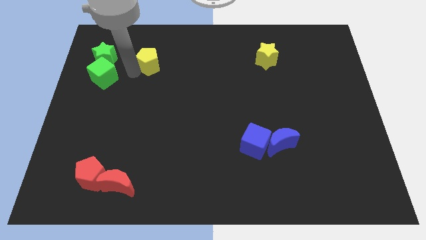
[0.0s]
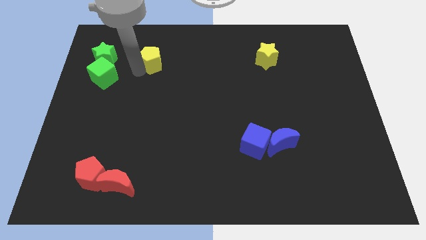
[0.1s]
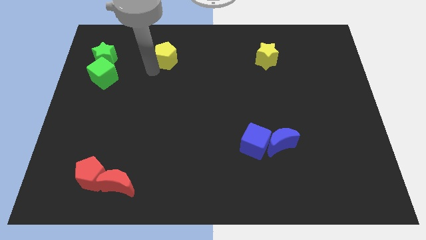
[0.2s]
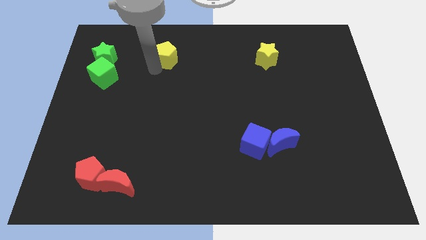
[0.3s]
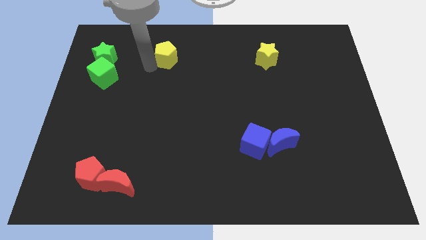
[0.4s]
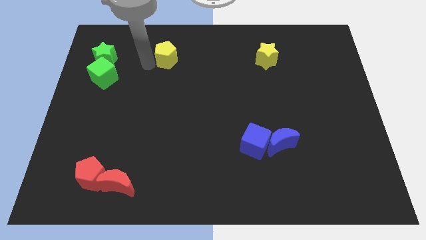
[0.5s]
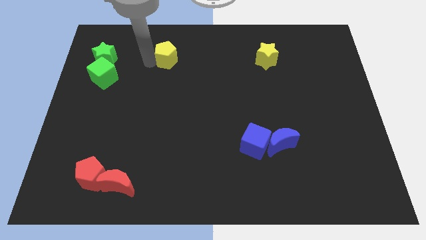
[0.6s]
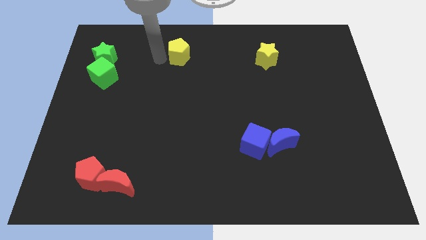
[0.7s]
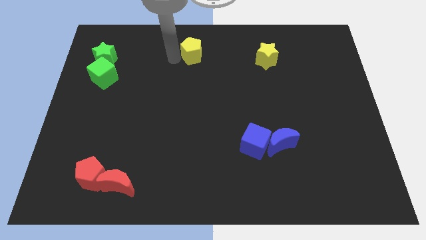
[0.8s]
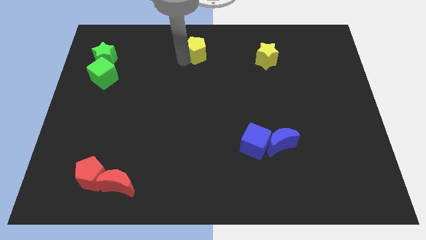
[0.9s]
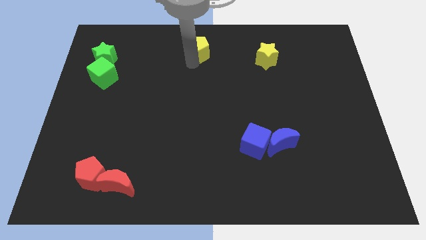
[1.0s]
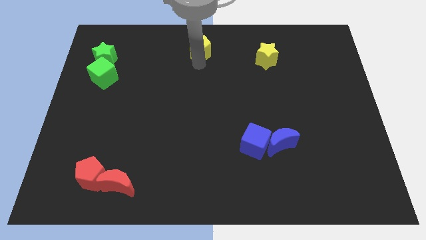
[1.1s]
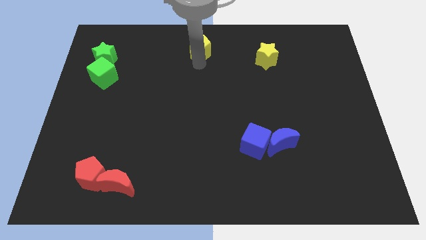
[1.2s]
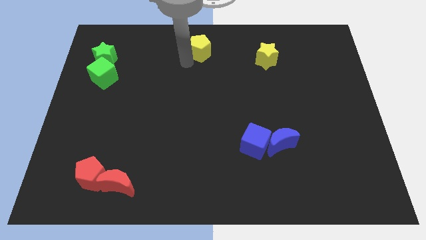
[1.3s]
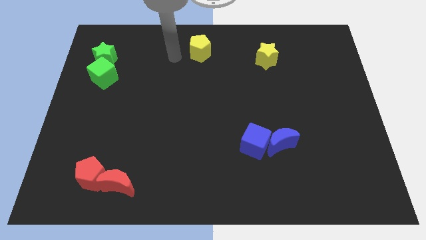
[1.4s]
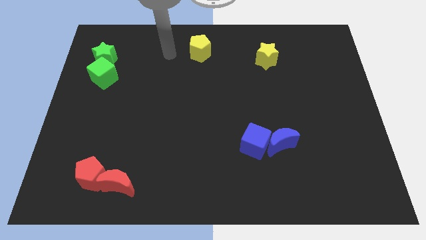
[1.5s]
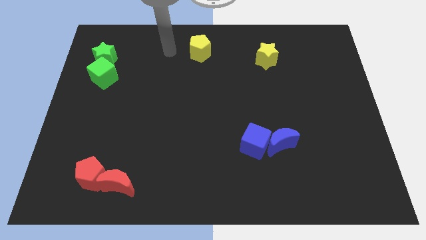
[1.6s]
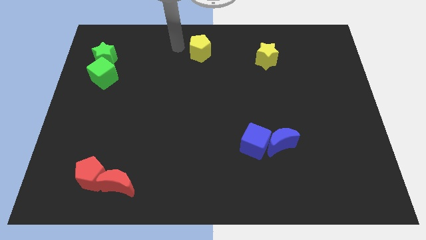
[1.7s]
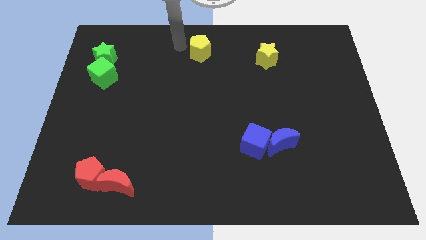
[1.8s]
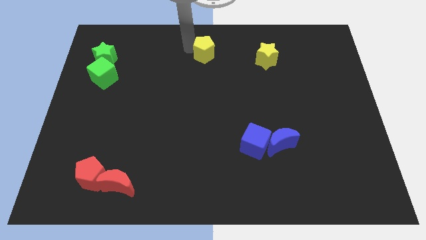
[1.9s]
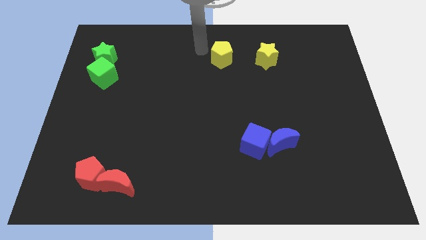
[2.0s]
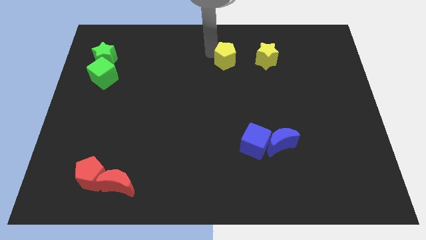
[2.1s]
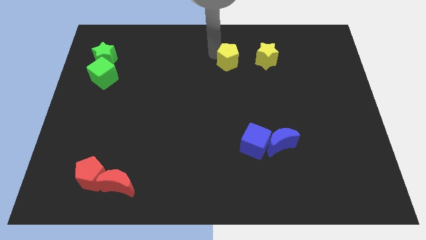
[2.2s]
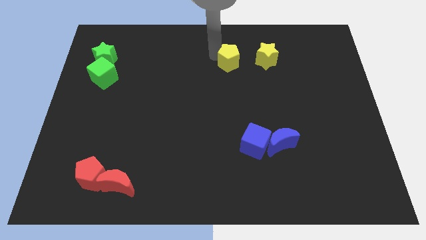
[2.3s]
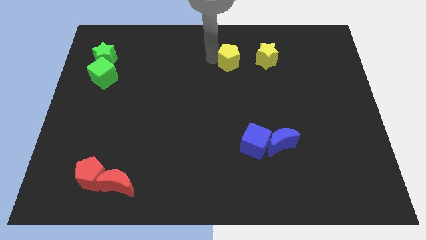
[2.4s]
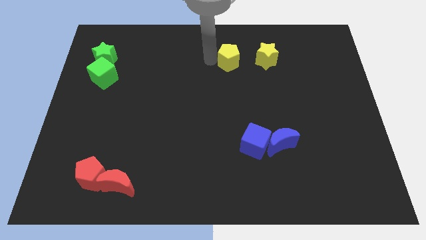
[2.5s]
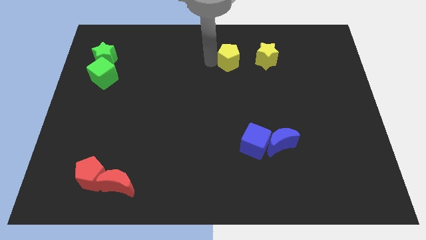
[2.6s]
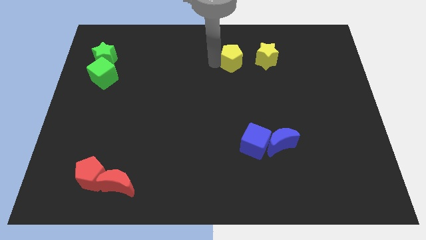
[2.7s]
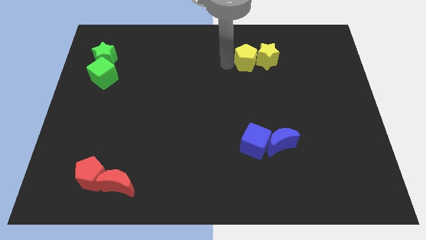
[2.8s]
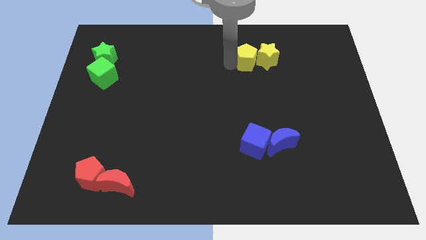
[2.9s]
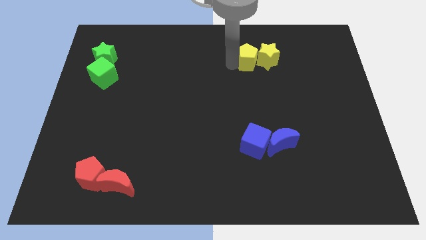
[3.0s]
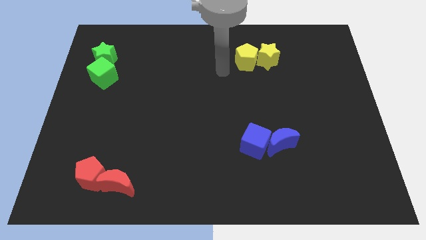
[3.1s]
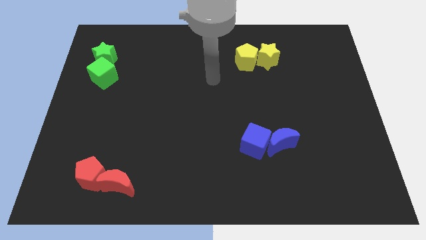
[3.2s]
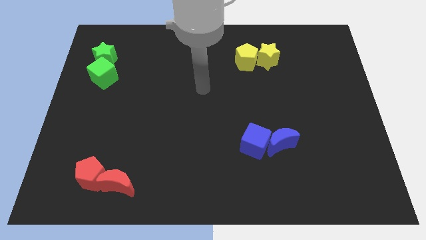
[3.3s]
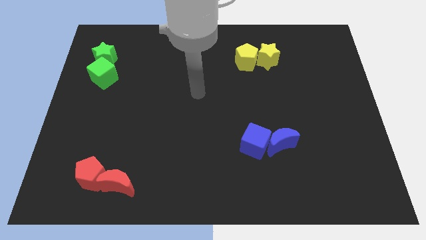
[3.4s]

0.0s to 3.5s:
drag the yellow pentagon into the yellow star

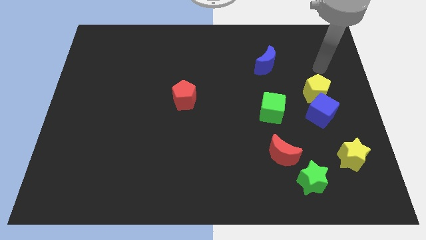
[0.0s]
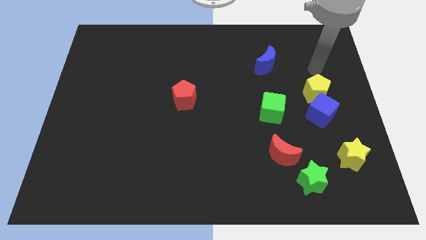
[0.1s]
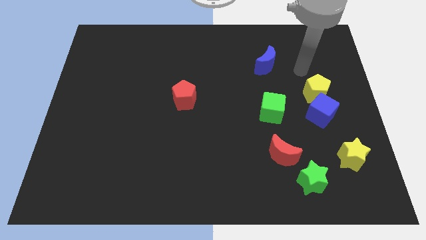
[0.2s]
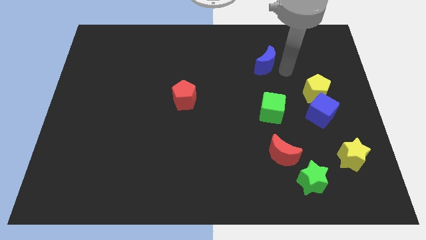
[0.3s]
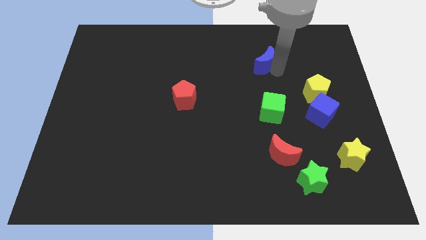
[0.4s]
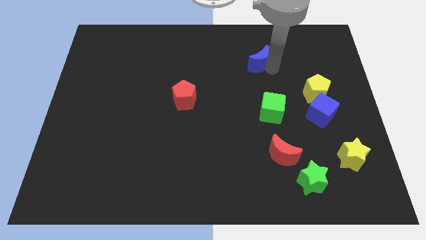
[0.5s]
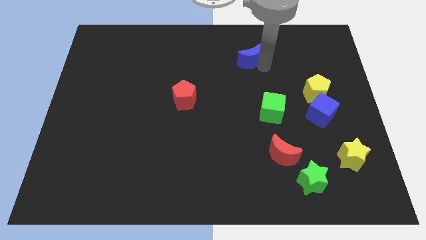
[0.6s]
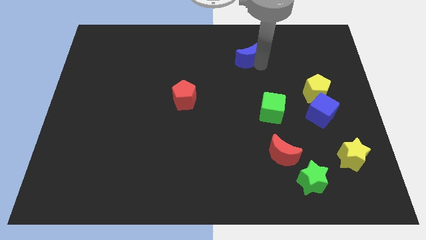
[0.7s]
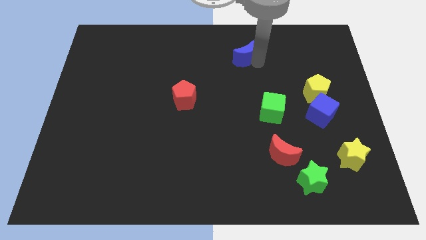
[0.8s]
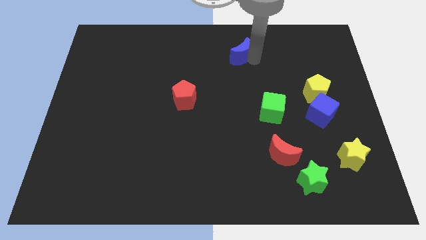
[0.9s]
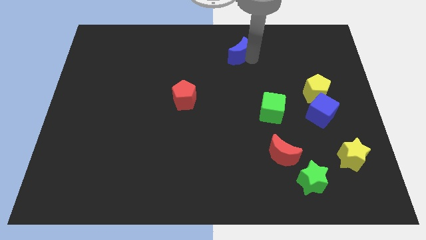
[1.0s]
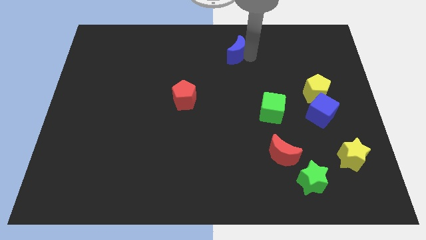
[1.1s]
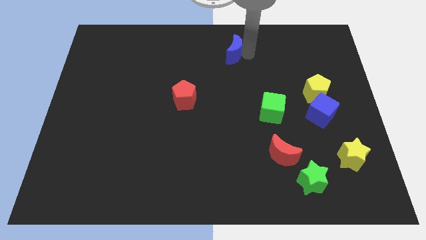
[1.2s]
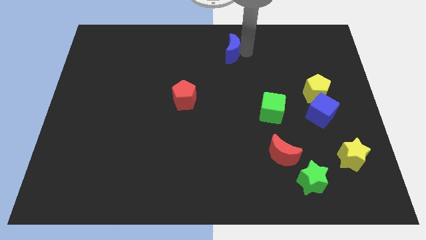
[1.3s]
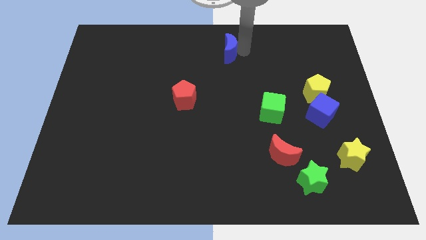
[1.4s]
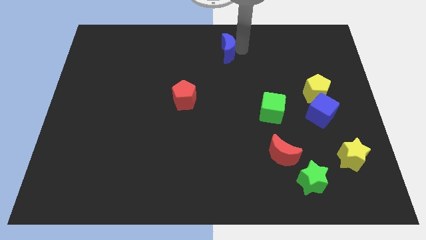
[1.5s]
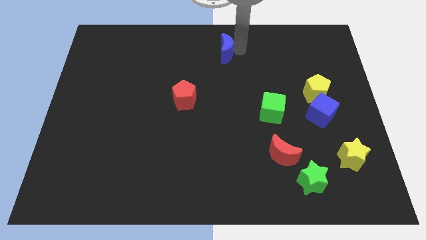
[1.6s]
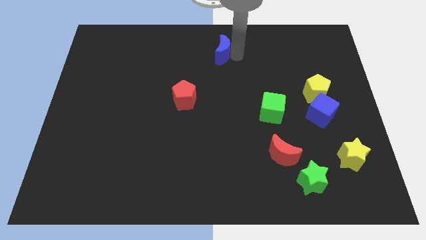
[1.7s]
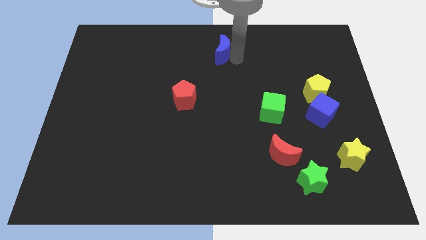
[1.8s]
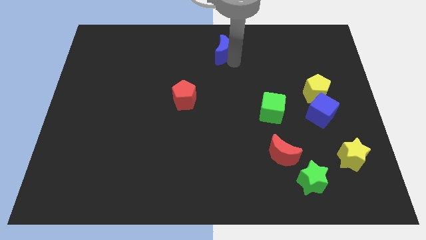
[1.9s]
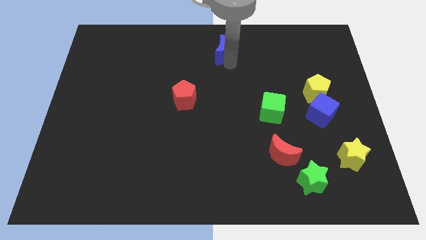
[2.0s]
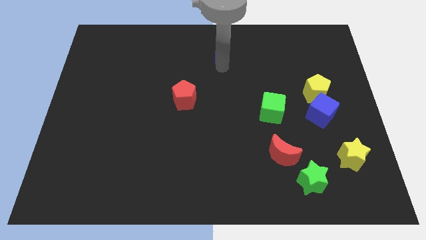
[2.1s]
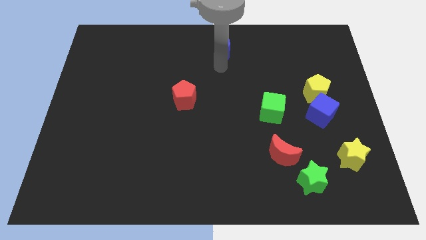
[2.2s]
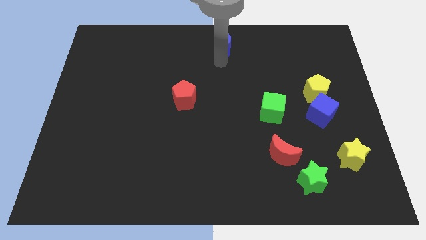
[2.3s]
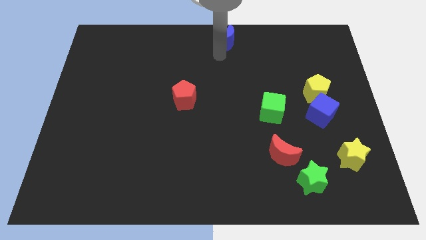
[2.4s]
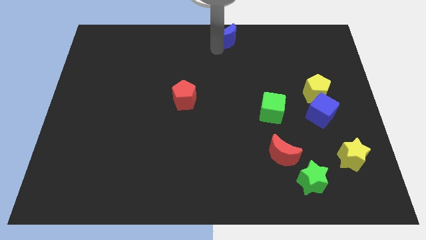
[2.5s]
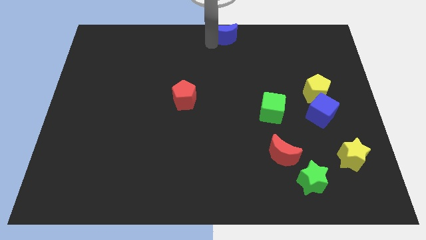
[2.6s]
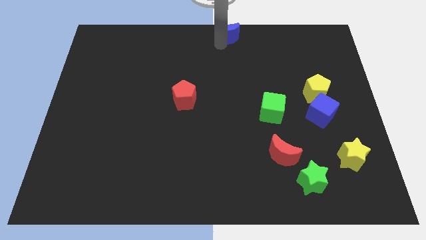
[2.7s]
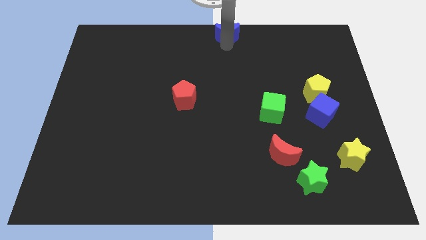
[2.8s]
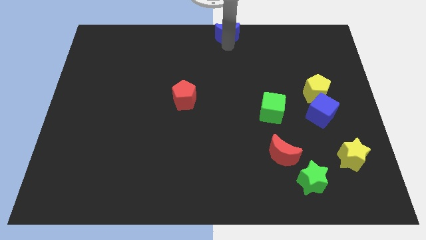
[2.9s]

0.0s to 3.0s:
push blue crescent towards top

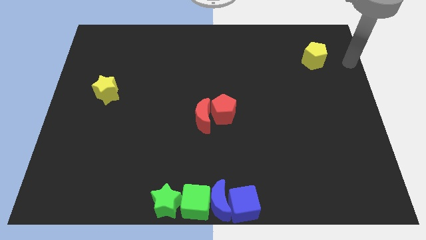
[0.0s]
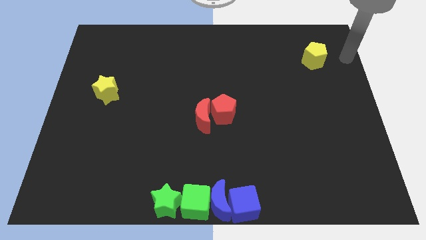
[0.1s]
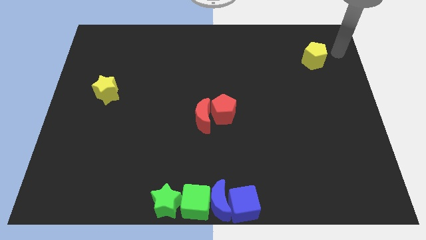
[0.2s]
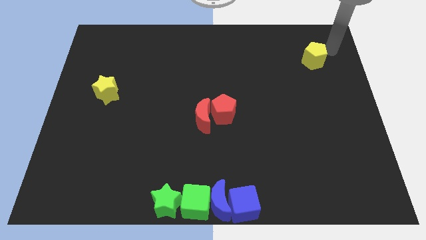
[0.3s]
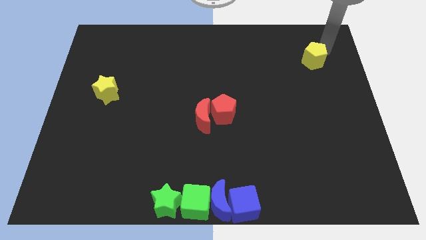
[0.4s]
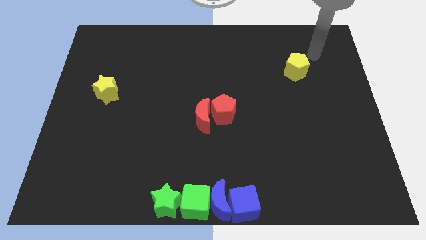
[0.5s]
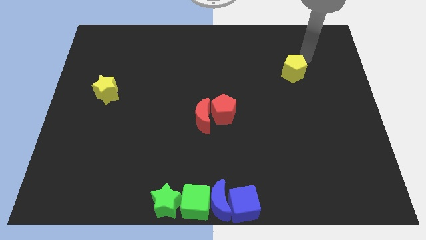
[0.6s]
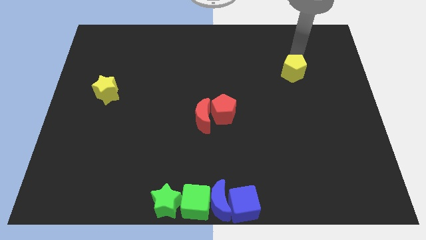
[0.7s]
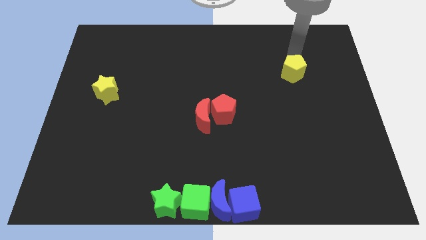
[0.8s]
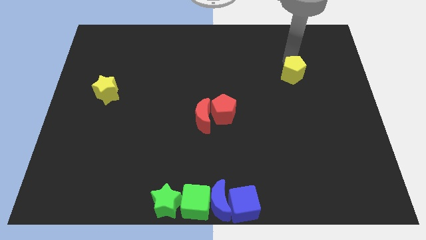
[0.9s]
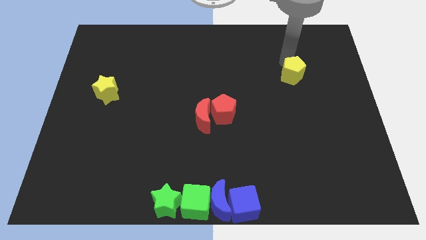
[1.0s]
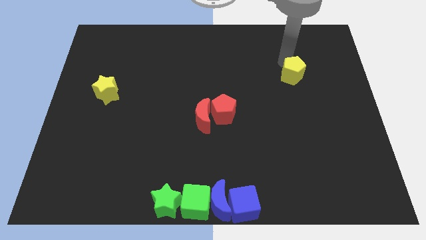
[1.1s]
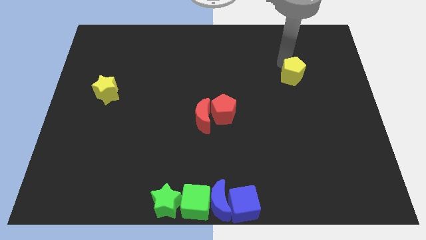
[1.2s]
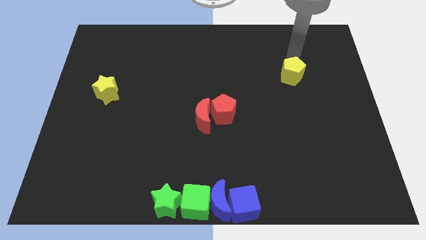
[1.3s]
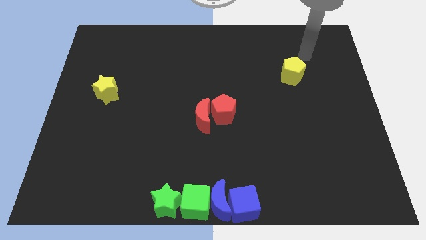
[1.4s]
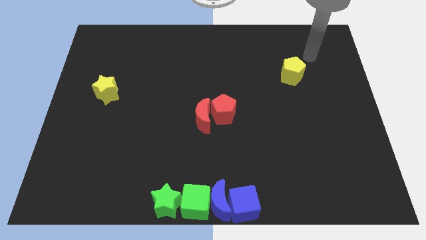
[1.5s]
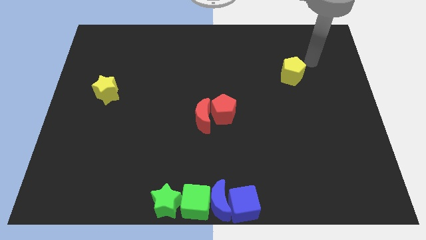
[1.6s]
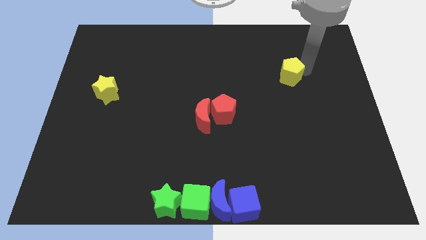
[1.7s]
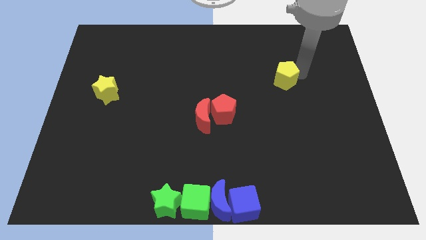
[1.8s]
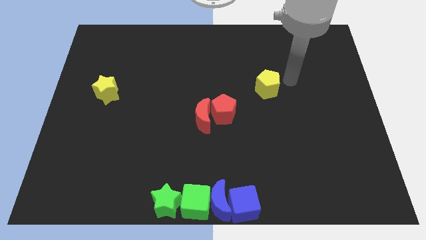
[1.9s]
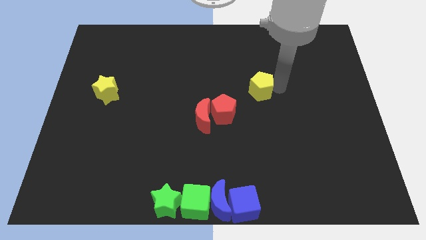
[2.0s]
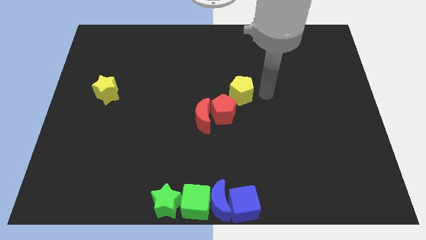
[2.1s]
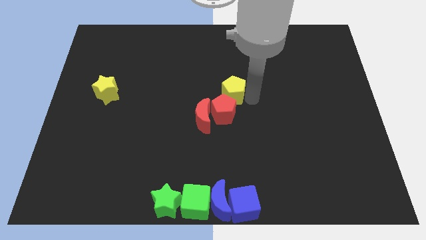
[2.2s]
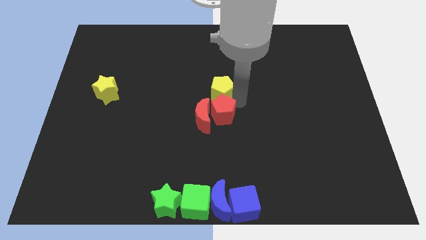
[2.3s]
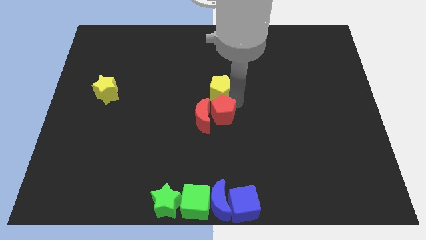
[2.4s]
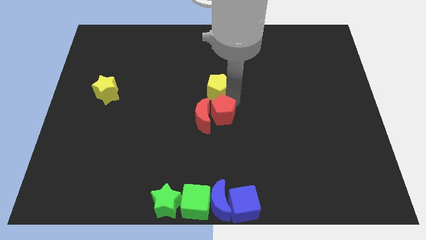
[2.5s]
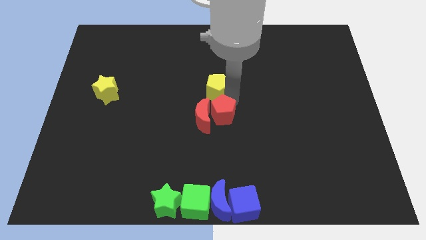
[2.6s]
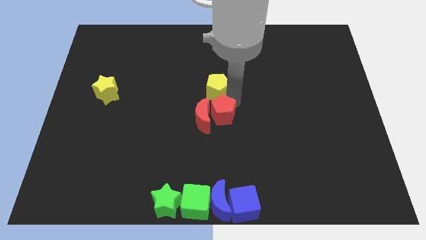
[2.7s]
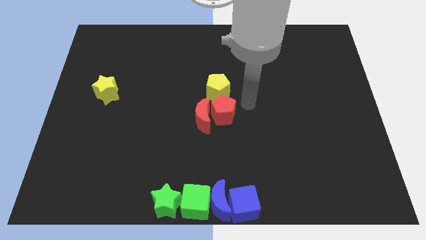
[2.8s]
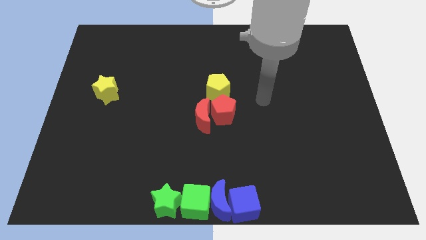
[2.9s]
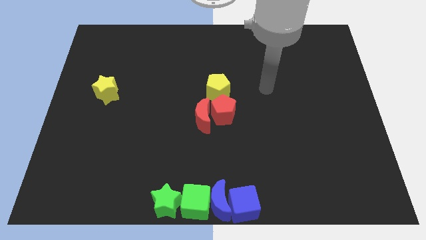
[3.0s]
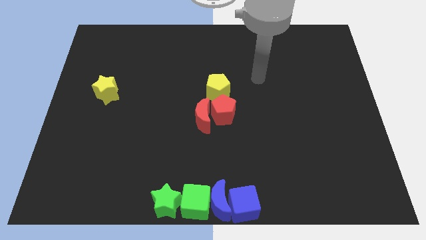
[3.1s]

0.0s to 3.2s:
place the yellow pentagon above the red pentagon
